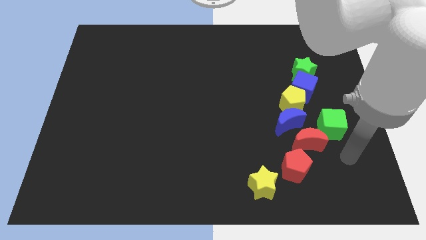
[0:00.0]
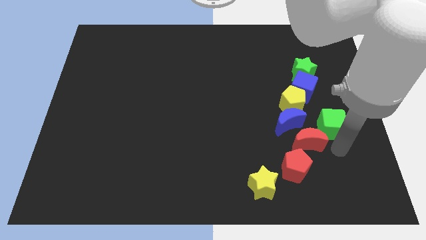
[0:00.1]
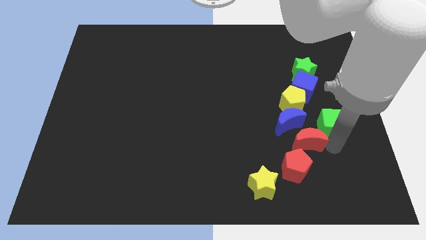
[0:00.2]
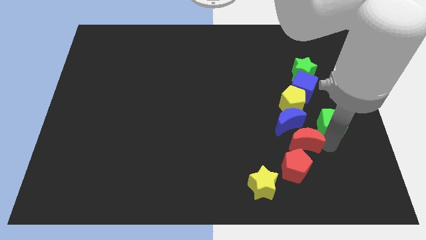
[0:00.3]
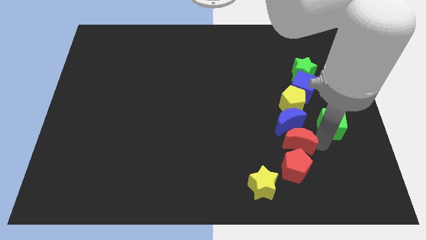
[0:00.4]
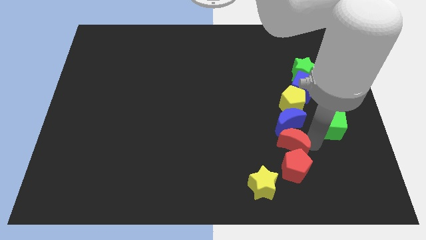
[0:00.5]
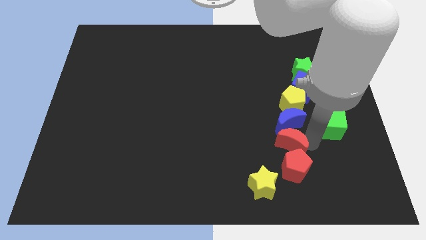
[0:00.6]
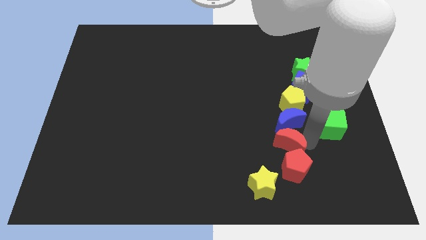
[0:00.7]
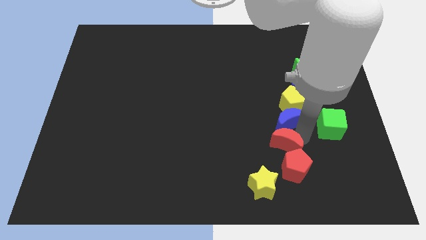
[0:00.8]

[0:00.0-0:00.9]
place the red moon below the blue cube

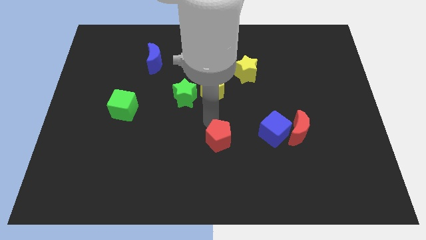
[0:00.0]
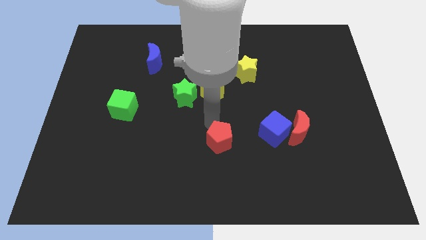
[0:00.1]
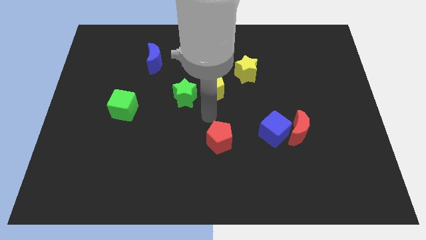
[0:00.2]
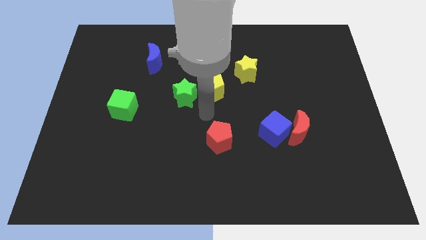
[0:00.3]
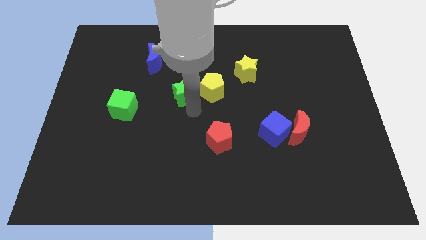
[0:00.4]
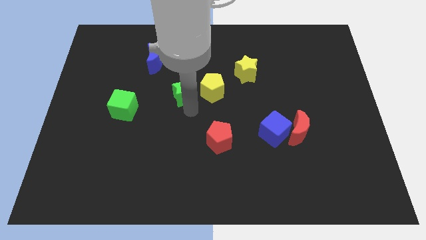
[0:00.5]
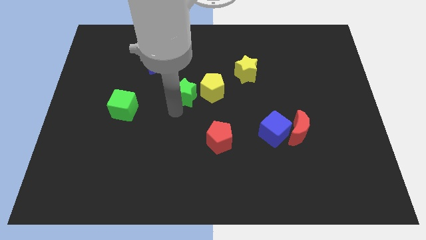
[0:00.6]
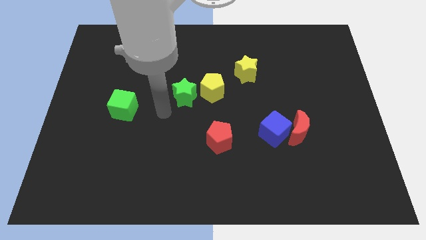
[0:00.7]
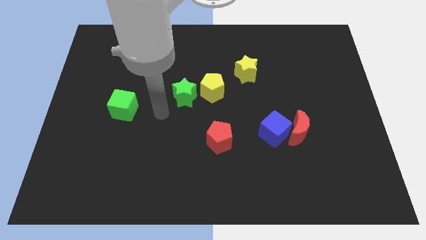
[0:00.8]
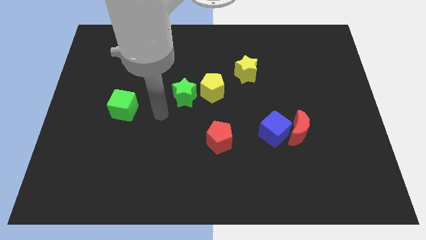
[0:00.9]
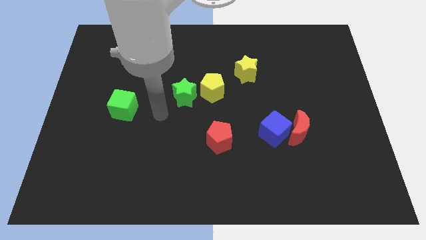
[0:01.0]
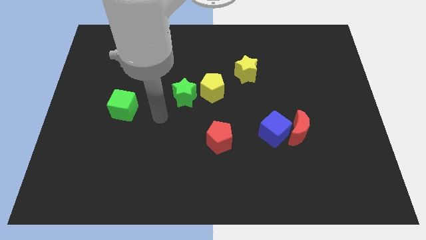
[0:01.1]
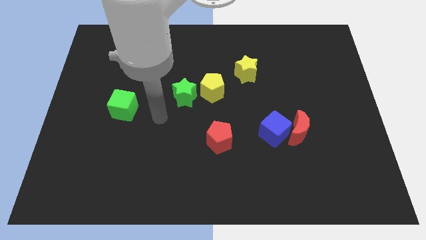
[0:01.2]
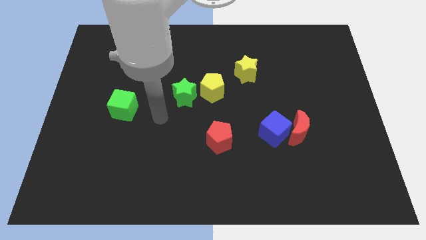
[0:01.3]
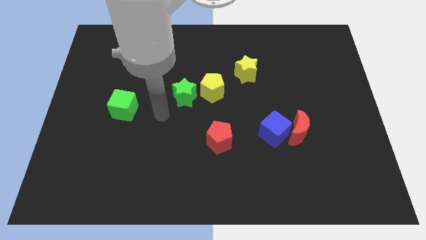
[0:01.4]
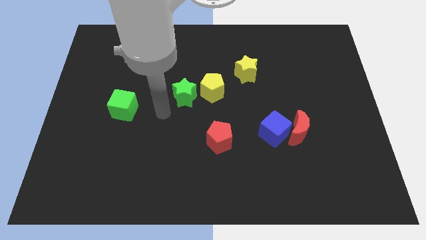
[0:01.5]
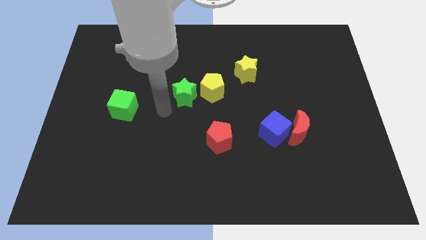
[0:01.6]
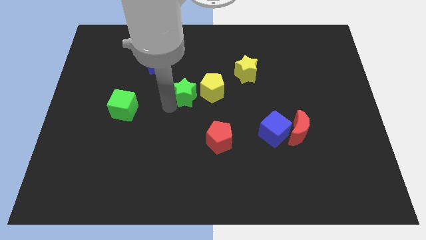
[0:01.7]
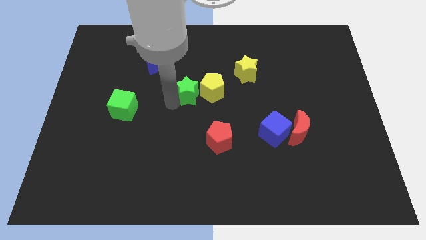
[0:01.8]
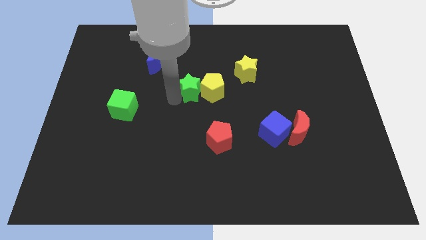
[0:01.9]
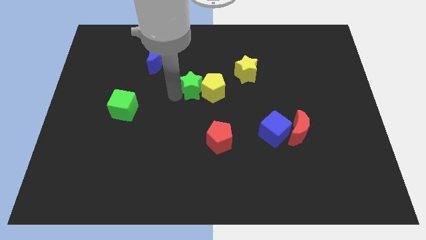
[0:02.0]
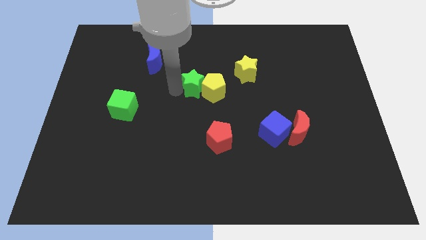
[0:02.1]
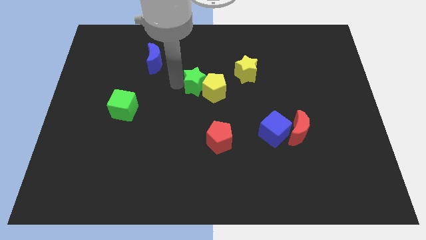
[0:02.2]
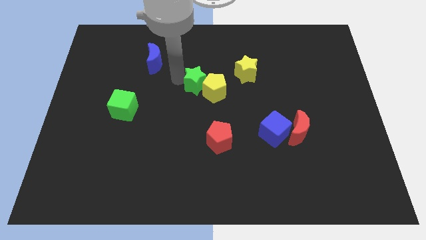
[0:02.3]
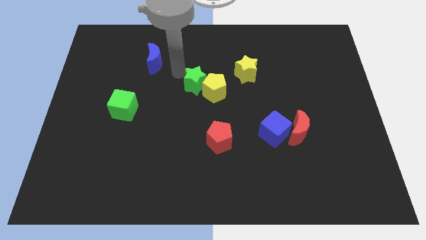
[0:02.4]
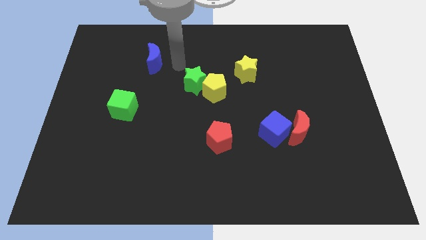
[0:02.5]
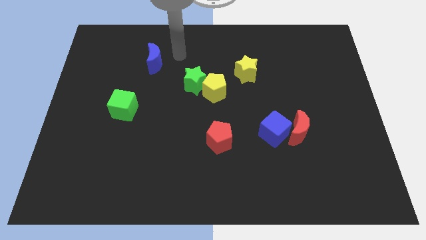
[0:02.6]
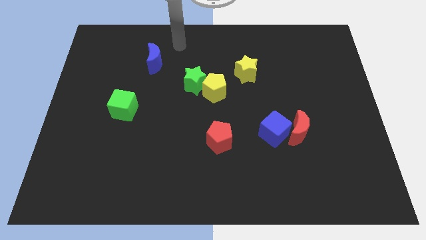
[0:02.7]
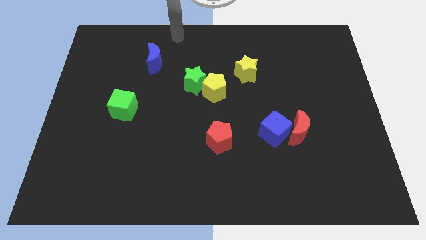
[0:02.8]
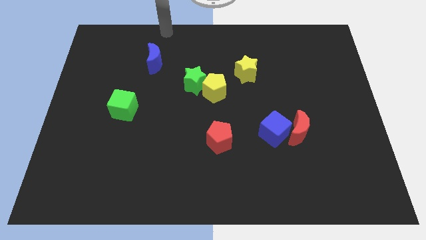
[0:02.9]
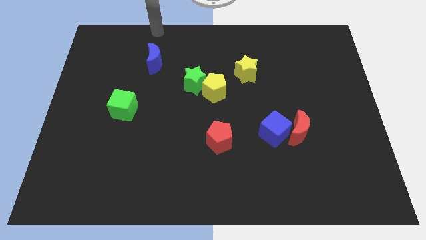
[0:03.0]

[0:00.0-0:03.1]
push green star into the yellow pentagon

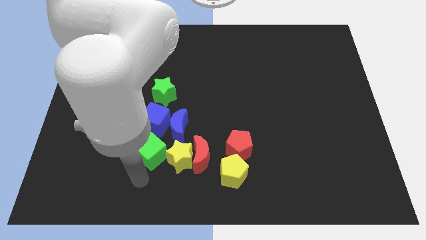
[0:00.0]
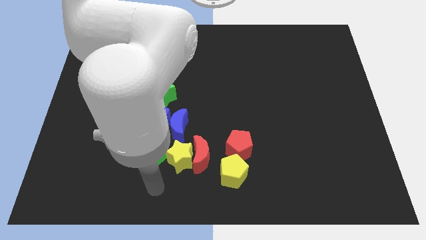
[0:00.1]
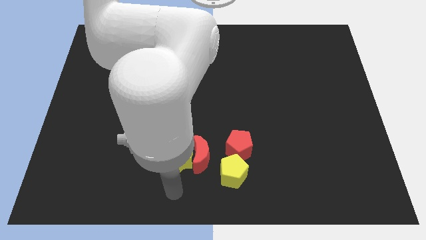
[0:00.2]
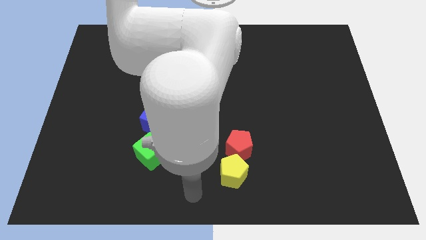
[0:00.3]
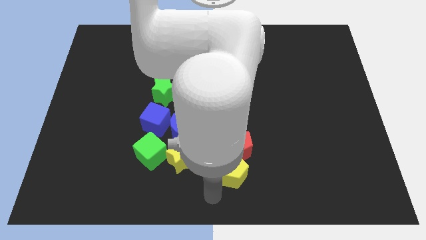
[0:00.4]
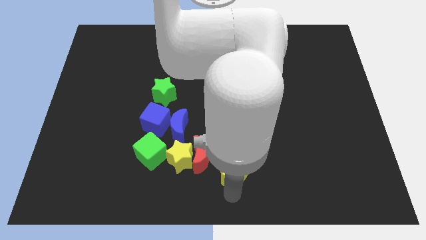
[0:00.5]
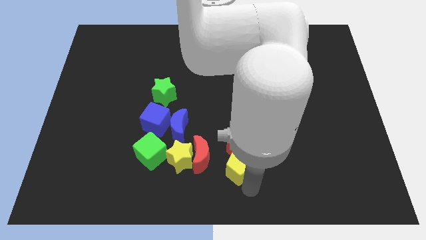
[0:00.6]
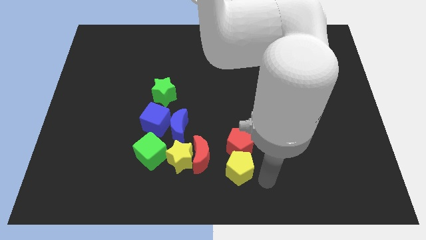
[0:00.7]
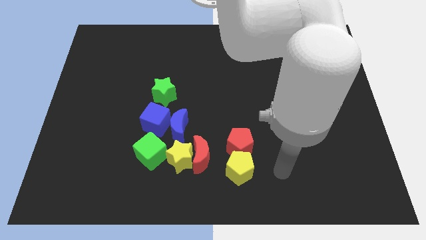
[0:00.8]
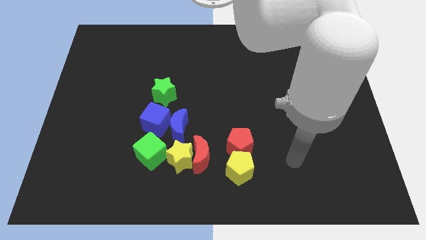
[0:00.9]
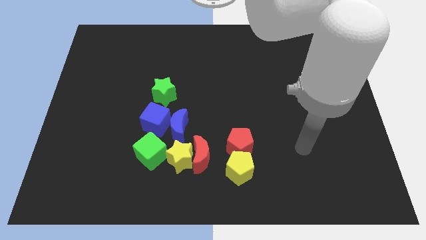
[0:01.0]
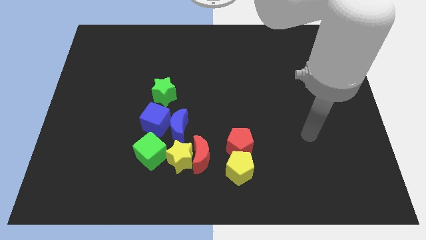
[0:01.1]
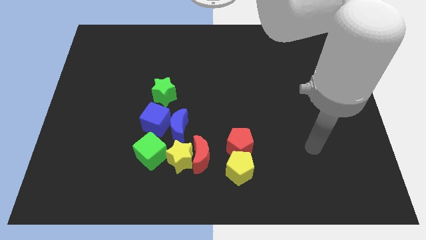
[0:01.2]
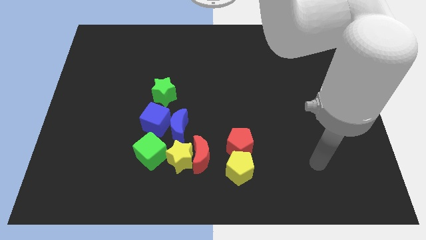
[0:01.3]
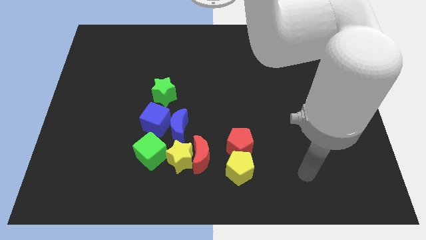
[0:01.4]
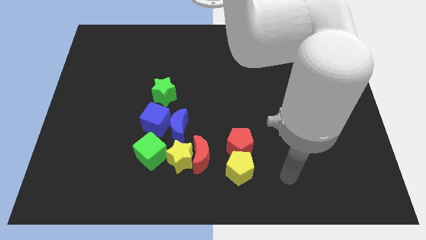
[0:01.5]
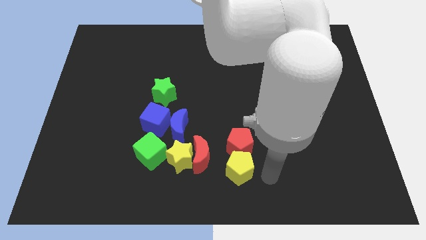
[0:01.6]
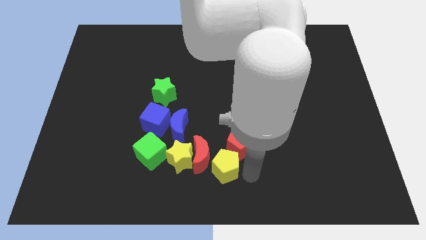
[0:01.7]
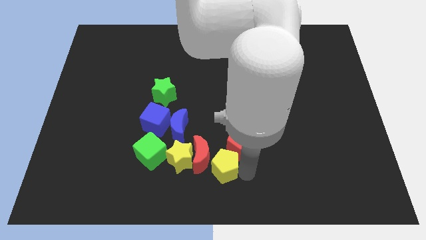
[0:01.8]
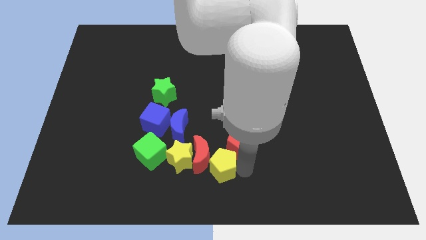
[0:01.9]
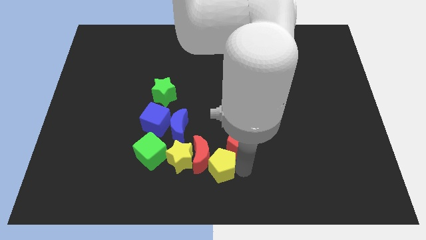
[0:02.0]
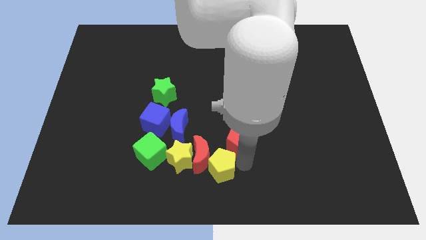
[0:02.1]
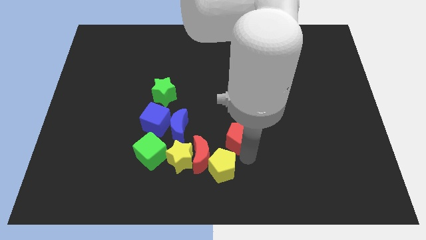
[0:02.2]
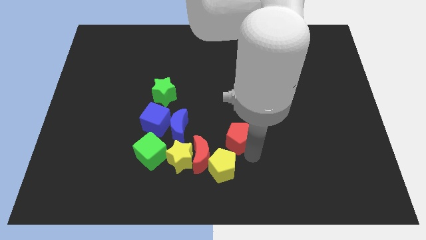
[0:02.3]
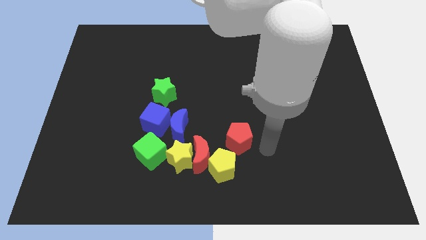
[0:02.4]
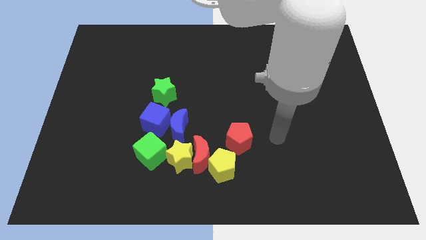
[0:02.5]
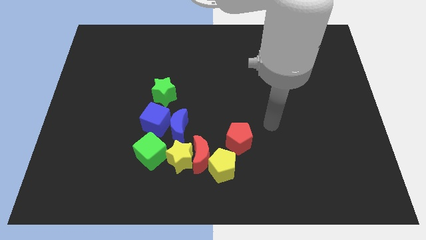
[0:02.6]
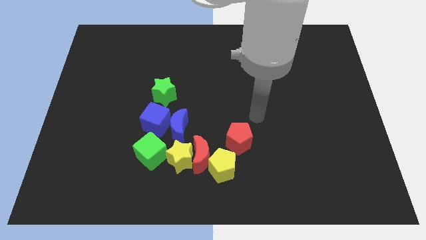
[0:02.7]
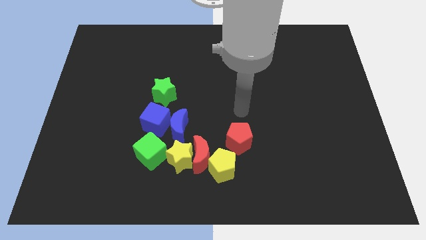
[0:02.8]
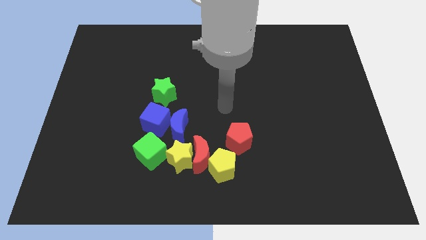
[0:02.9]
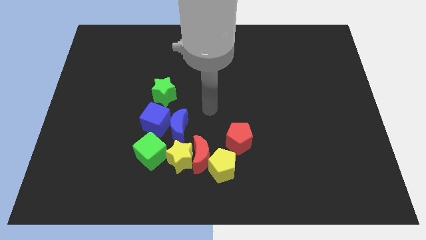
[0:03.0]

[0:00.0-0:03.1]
separate the yellow pentagon and red pentagon from each other

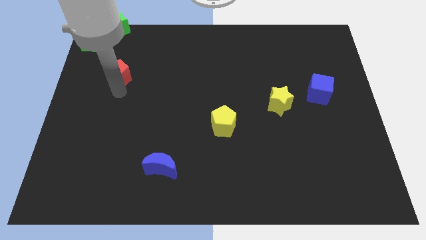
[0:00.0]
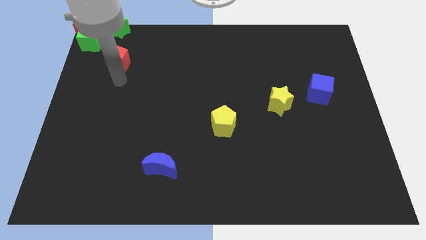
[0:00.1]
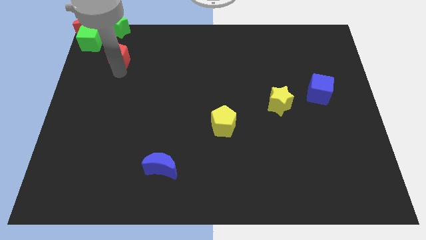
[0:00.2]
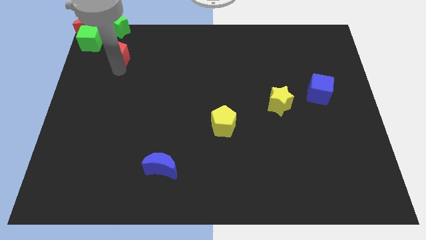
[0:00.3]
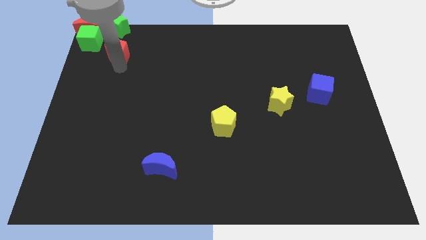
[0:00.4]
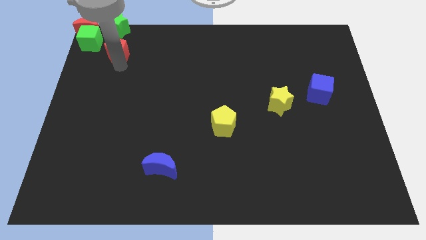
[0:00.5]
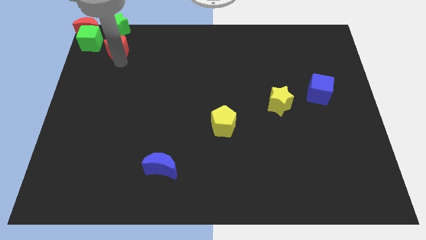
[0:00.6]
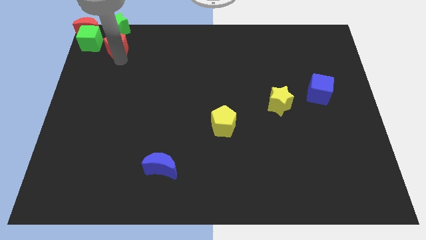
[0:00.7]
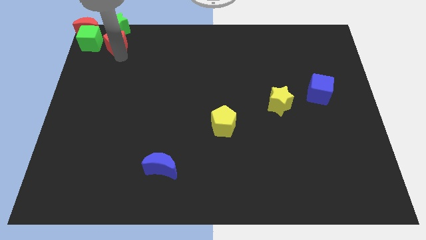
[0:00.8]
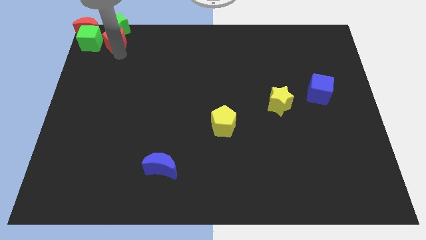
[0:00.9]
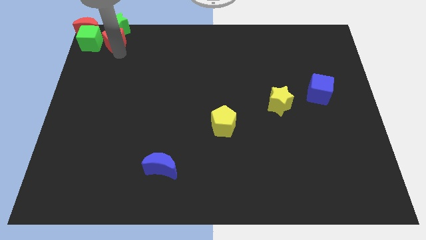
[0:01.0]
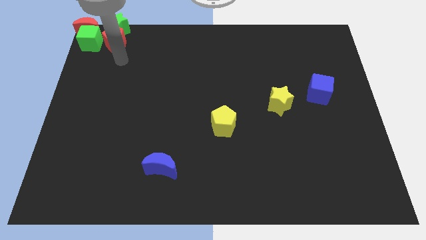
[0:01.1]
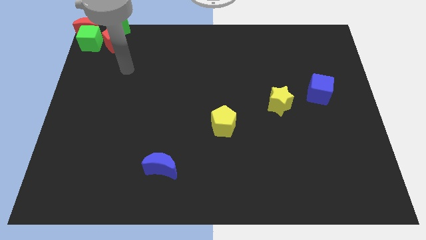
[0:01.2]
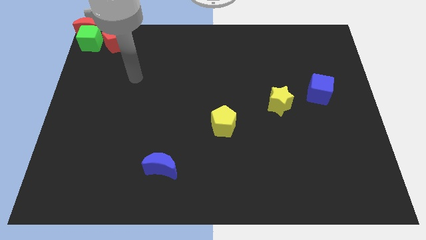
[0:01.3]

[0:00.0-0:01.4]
place the red pentagon to the right of the green cube

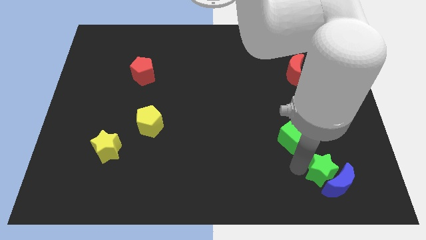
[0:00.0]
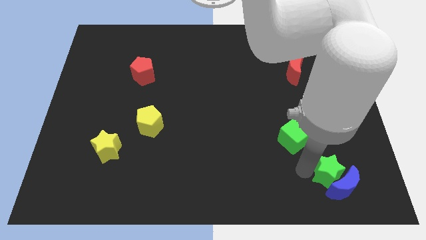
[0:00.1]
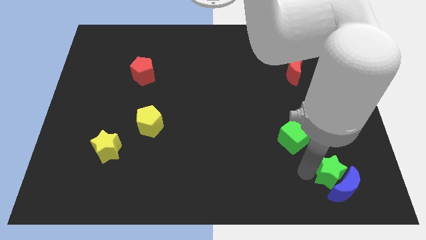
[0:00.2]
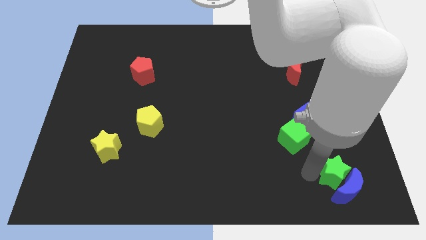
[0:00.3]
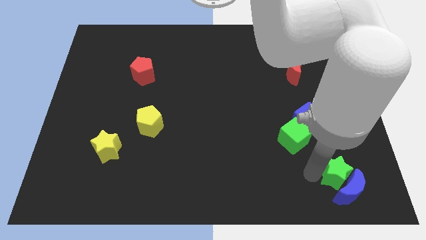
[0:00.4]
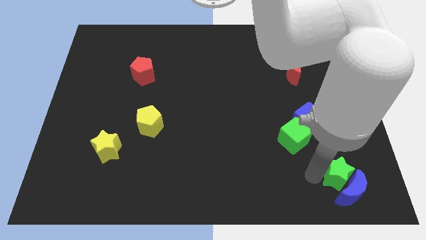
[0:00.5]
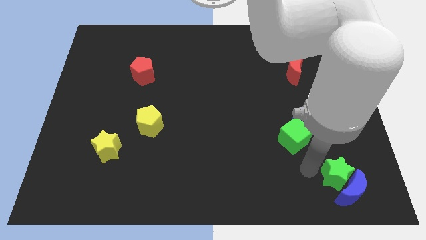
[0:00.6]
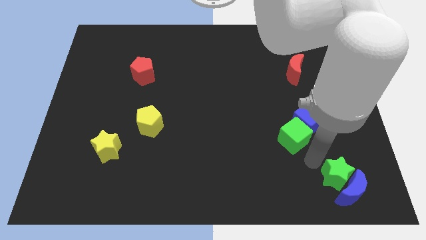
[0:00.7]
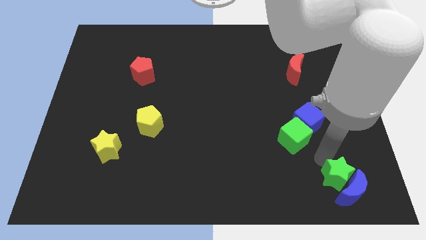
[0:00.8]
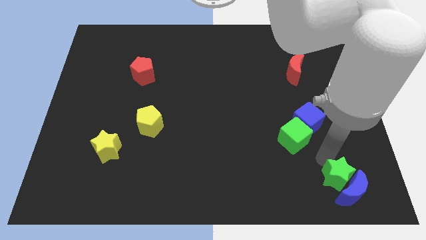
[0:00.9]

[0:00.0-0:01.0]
move the green star and blue moon to the bottom right
